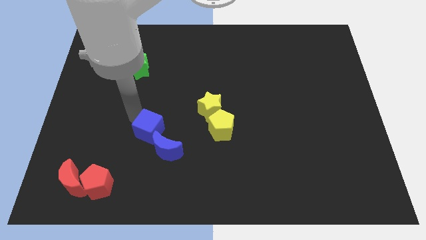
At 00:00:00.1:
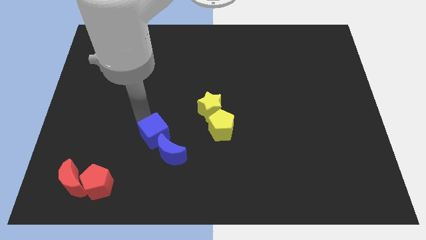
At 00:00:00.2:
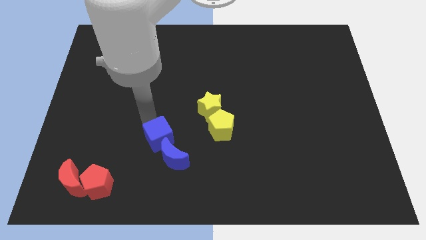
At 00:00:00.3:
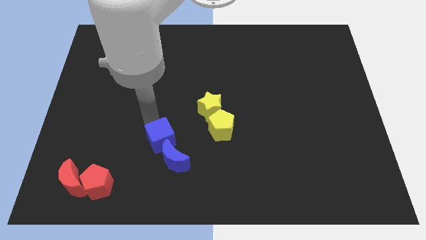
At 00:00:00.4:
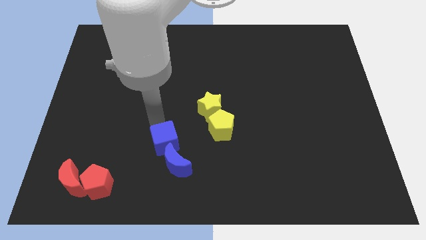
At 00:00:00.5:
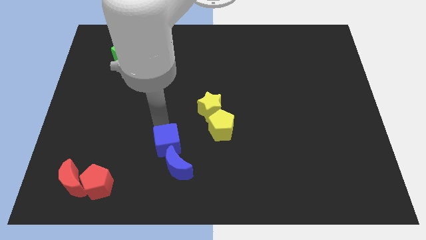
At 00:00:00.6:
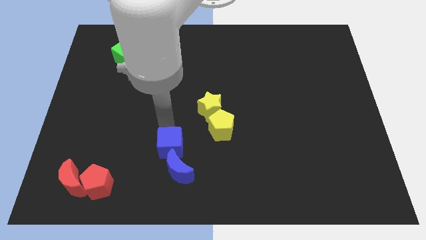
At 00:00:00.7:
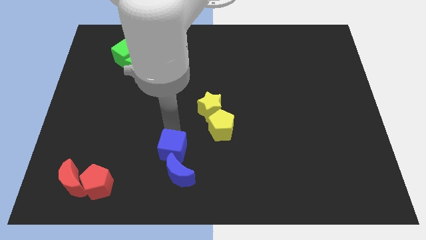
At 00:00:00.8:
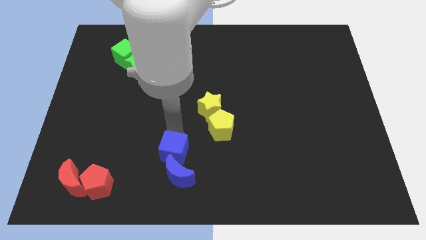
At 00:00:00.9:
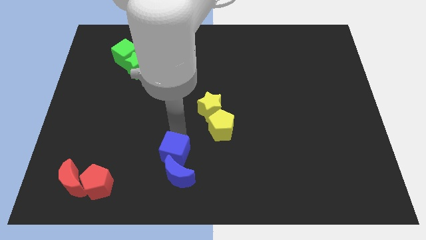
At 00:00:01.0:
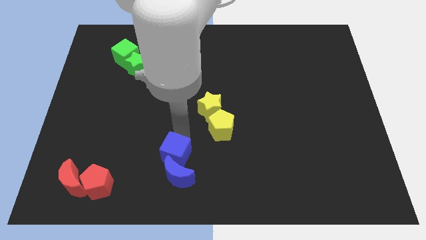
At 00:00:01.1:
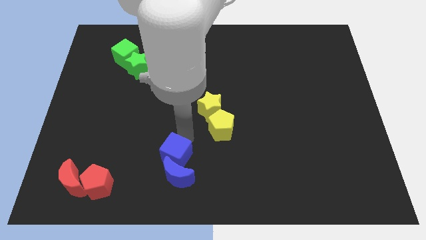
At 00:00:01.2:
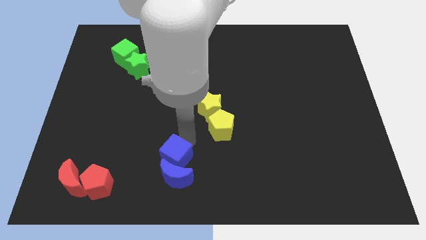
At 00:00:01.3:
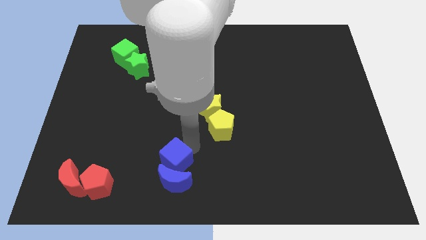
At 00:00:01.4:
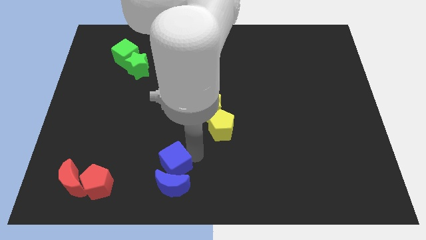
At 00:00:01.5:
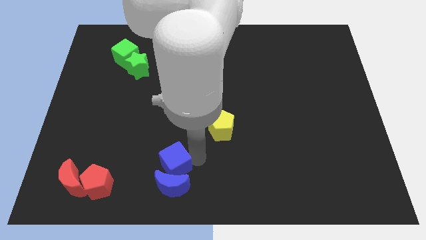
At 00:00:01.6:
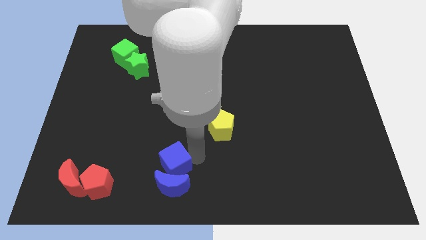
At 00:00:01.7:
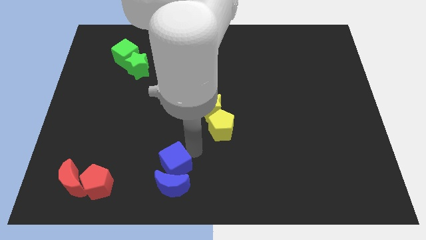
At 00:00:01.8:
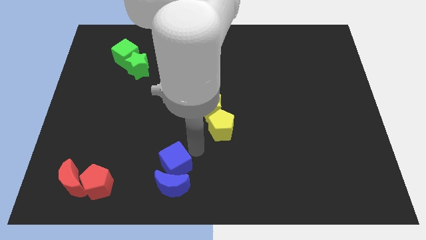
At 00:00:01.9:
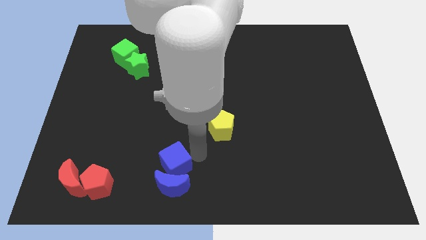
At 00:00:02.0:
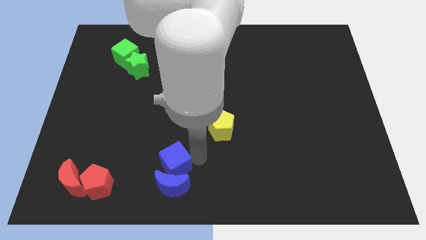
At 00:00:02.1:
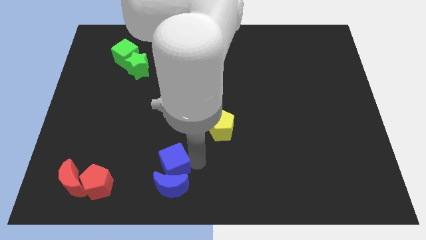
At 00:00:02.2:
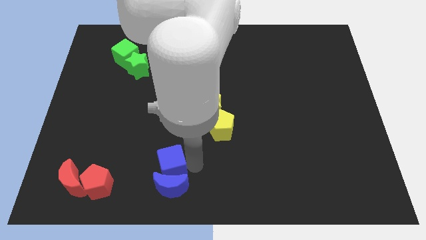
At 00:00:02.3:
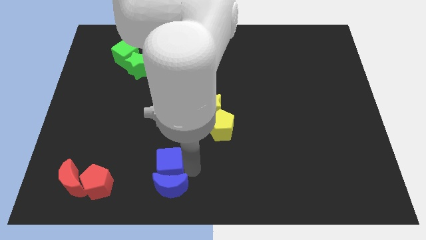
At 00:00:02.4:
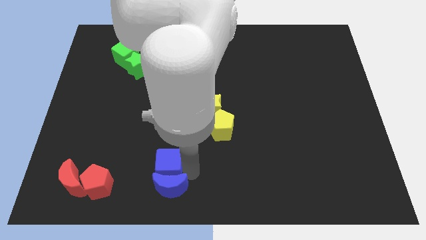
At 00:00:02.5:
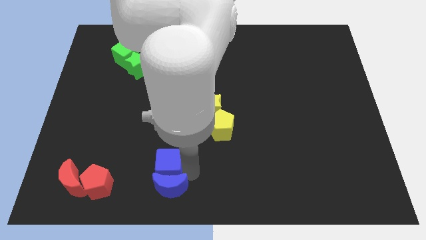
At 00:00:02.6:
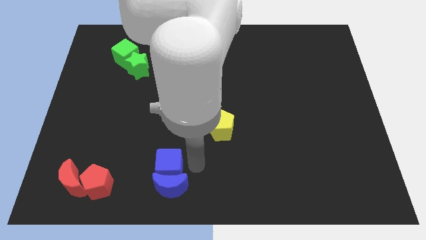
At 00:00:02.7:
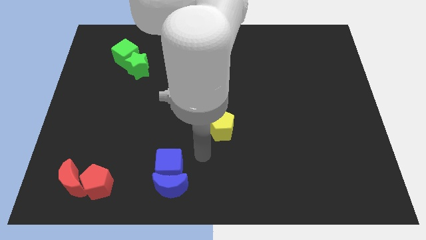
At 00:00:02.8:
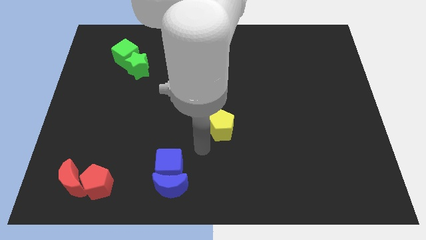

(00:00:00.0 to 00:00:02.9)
move blue blocks to the right of red blocks

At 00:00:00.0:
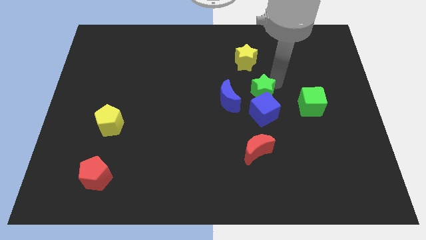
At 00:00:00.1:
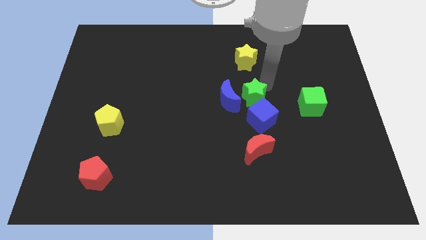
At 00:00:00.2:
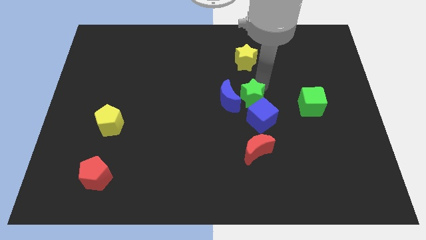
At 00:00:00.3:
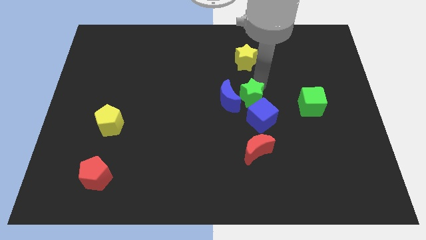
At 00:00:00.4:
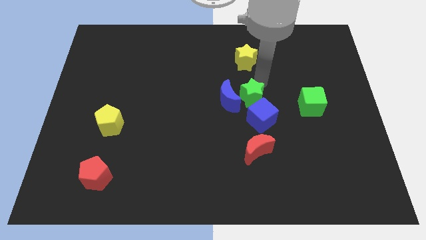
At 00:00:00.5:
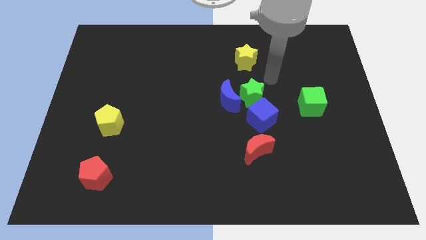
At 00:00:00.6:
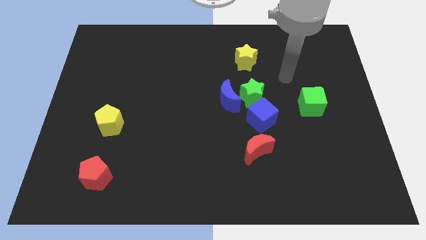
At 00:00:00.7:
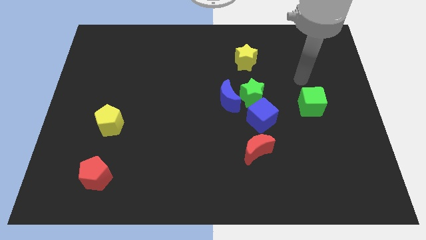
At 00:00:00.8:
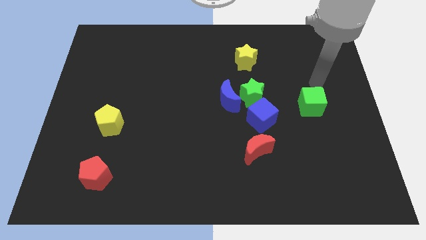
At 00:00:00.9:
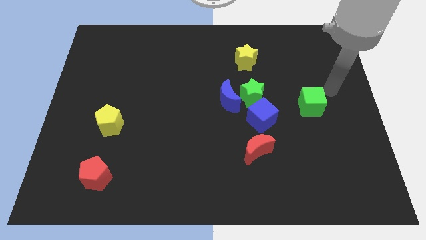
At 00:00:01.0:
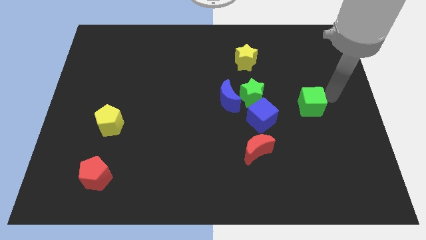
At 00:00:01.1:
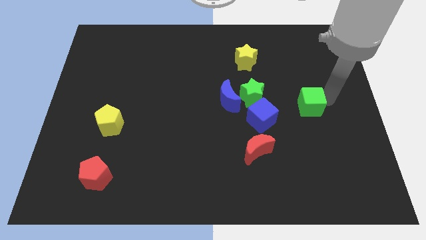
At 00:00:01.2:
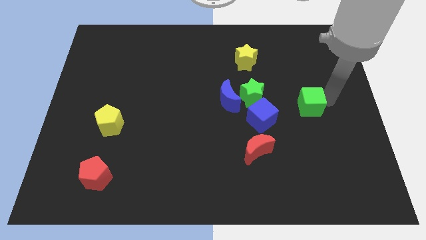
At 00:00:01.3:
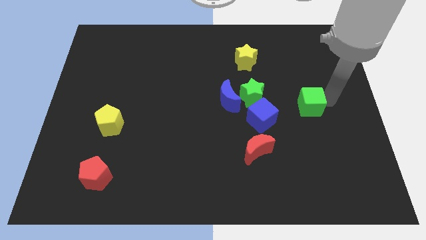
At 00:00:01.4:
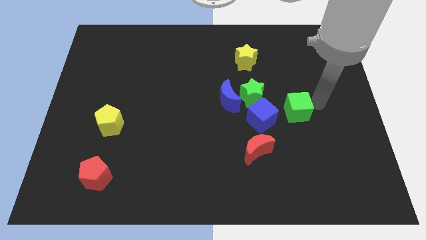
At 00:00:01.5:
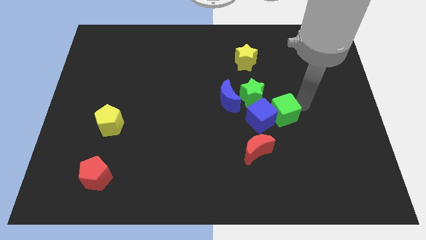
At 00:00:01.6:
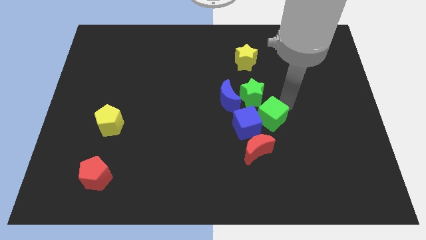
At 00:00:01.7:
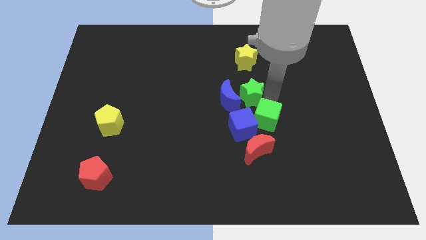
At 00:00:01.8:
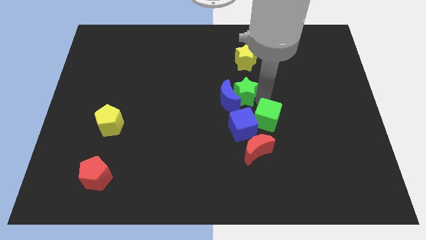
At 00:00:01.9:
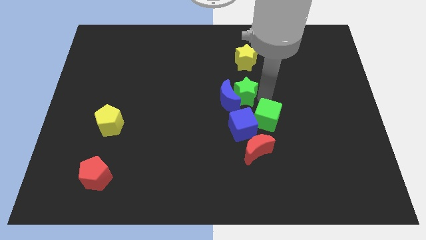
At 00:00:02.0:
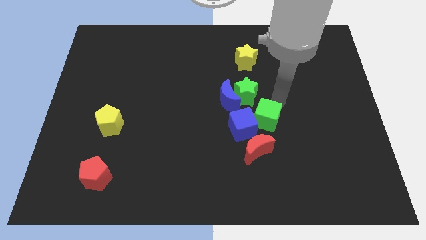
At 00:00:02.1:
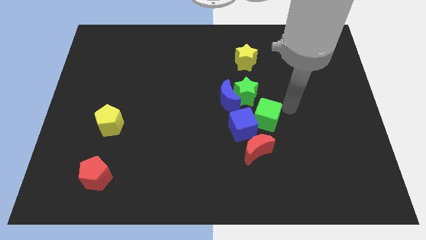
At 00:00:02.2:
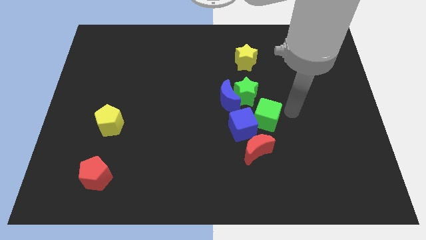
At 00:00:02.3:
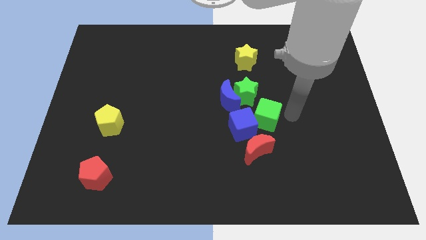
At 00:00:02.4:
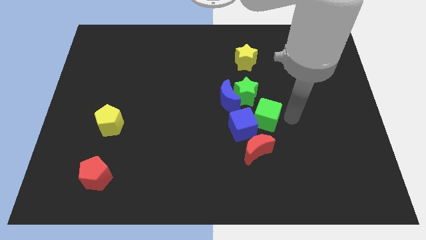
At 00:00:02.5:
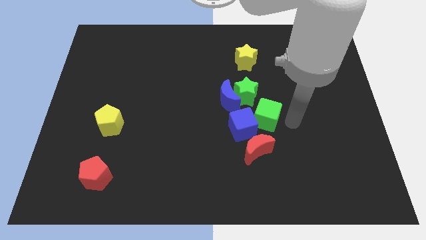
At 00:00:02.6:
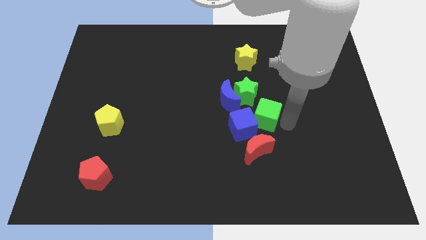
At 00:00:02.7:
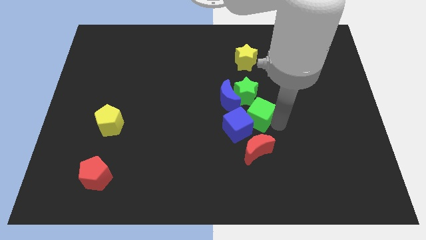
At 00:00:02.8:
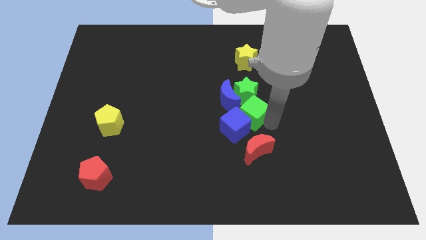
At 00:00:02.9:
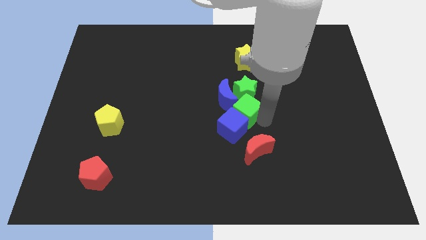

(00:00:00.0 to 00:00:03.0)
push the green cube below to the green star

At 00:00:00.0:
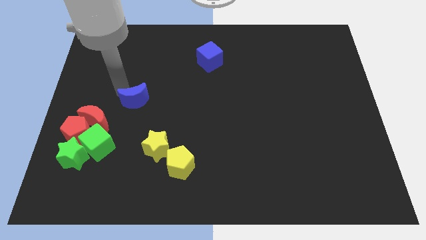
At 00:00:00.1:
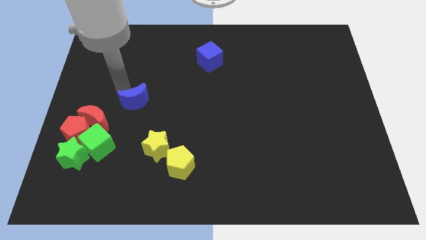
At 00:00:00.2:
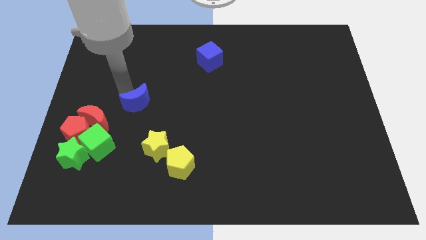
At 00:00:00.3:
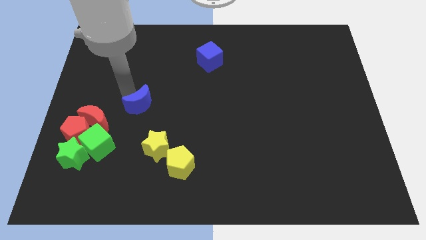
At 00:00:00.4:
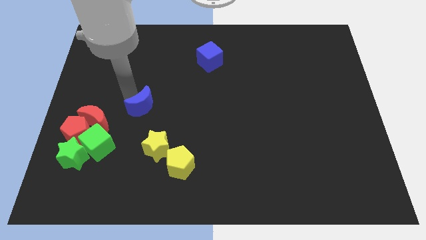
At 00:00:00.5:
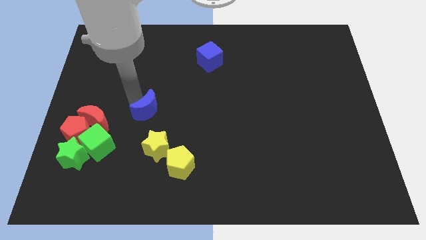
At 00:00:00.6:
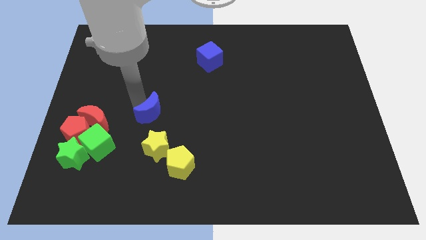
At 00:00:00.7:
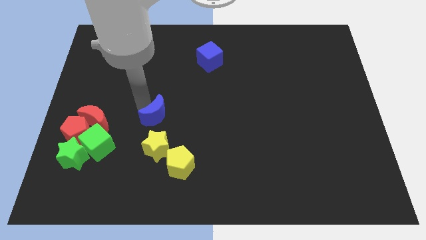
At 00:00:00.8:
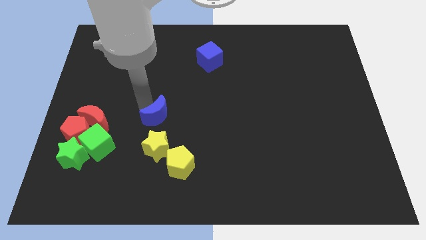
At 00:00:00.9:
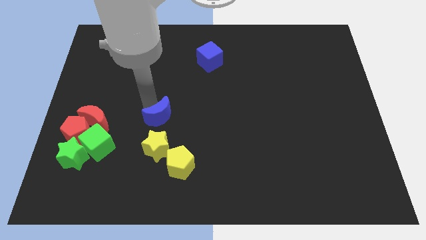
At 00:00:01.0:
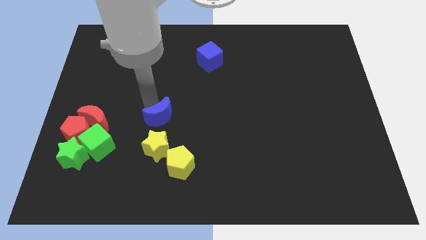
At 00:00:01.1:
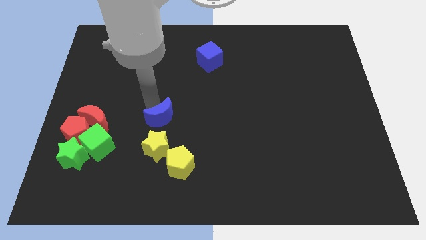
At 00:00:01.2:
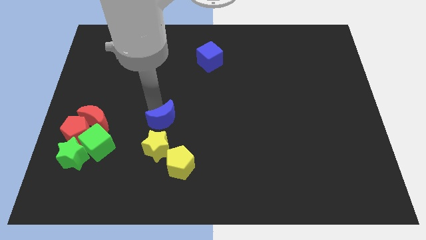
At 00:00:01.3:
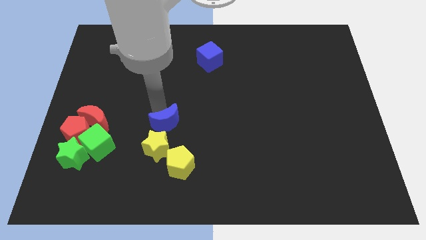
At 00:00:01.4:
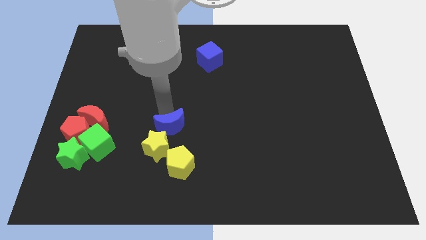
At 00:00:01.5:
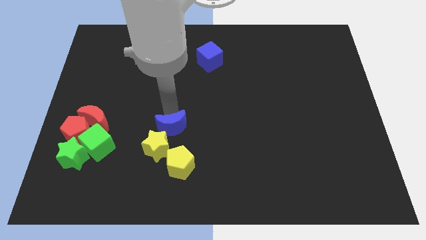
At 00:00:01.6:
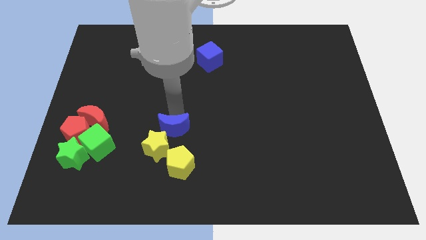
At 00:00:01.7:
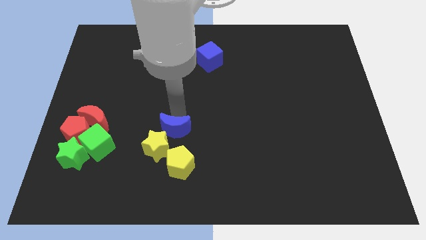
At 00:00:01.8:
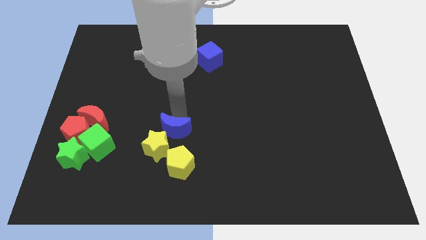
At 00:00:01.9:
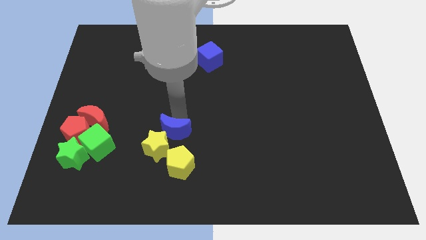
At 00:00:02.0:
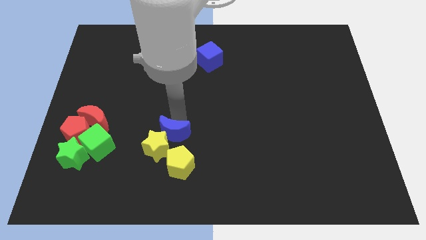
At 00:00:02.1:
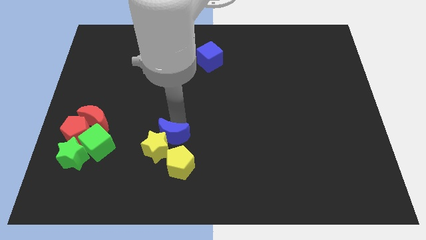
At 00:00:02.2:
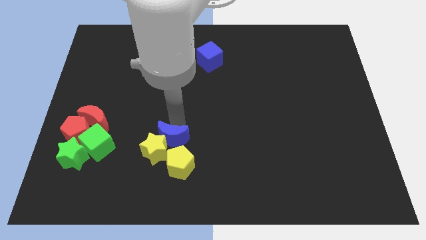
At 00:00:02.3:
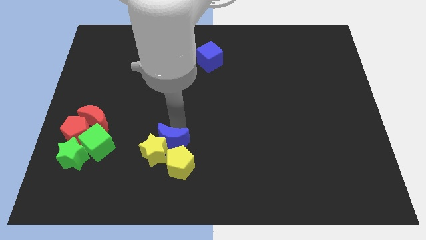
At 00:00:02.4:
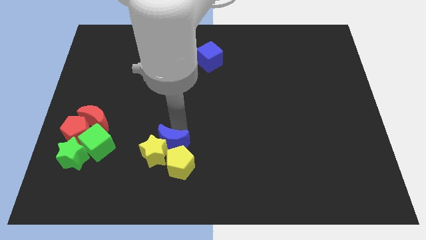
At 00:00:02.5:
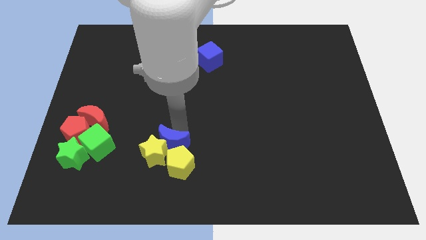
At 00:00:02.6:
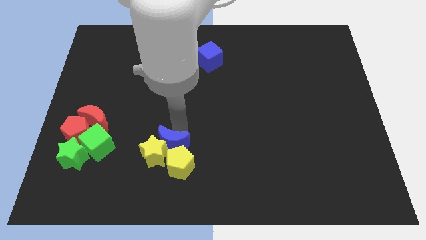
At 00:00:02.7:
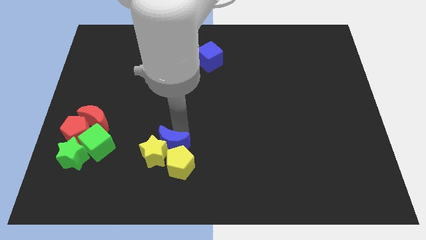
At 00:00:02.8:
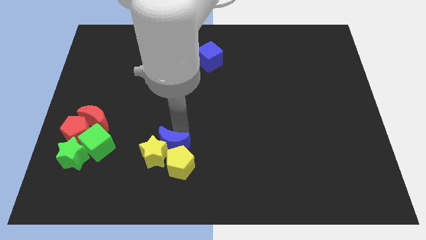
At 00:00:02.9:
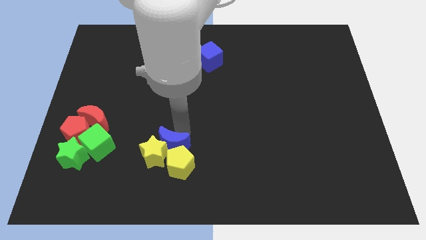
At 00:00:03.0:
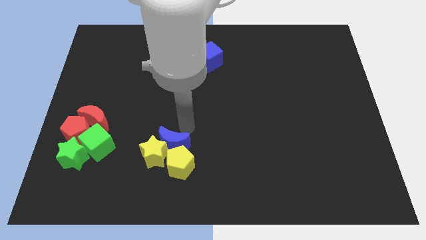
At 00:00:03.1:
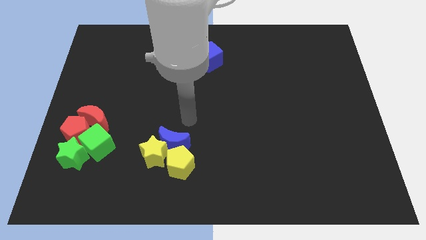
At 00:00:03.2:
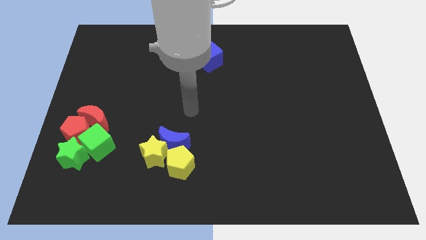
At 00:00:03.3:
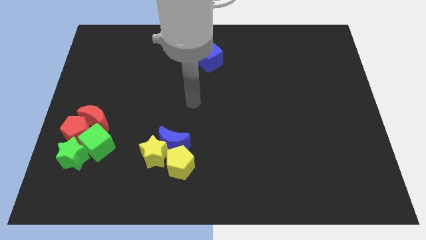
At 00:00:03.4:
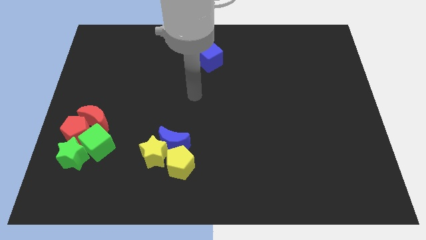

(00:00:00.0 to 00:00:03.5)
push the blue crescent into the yellow star and yellow pentagon
